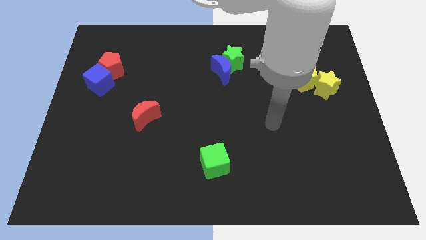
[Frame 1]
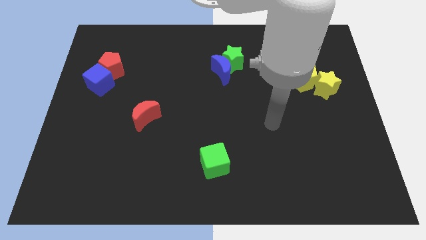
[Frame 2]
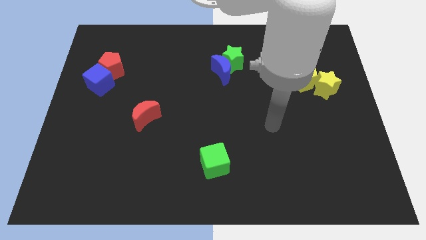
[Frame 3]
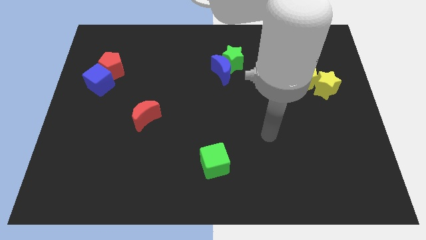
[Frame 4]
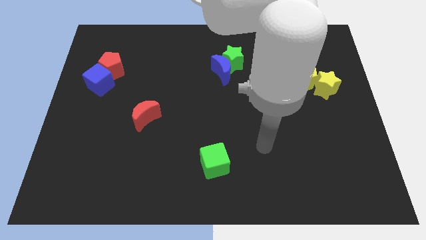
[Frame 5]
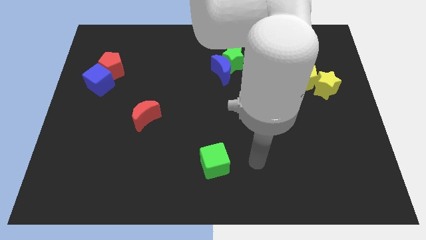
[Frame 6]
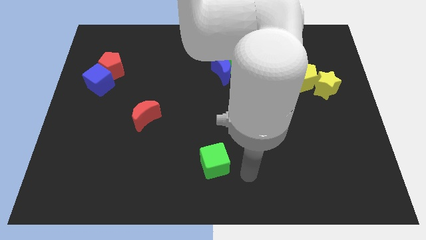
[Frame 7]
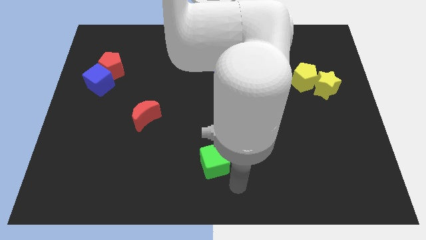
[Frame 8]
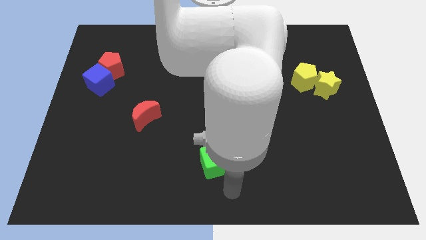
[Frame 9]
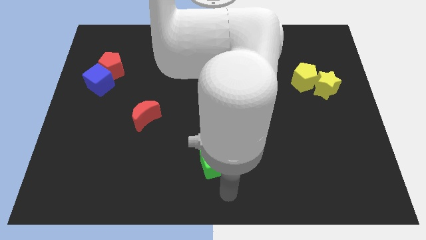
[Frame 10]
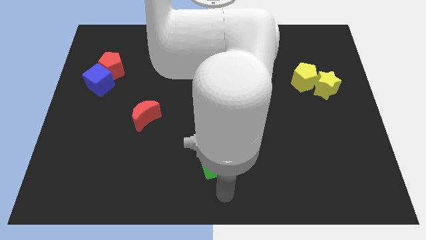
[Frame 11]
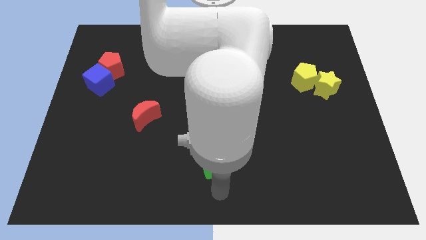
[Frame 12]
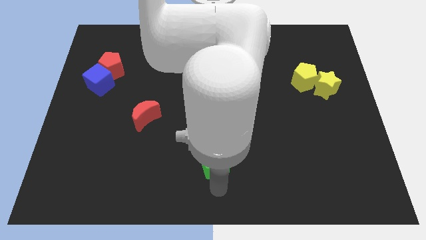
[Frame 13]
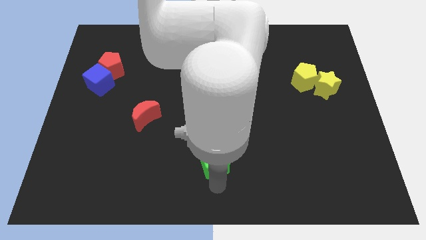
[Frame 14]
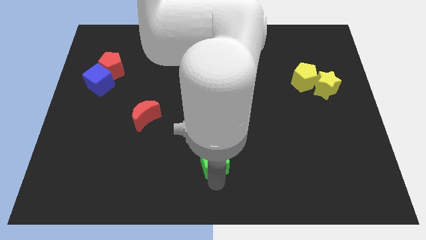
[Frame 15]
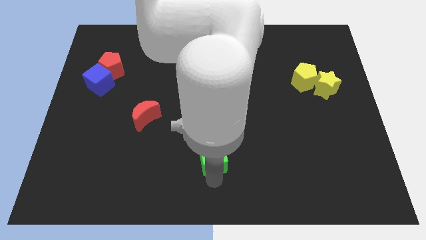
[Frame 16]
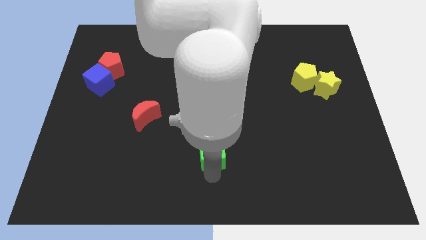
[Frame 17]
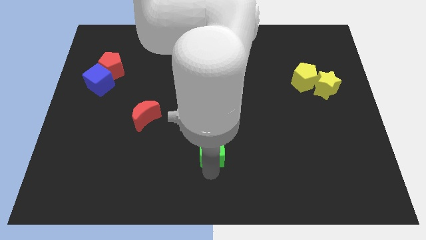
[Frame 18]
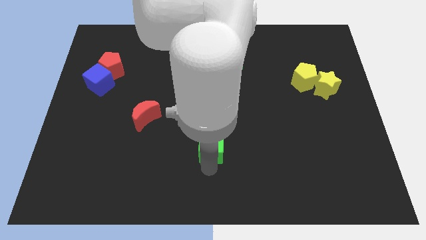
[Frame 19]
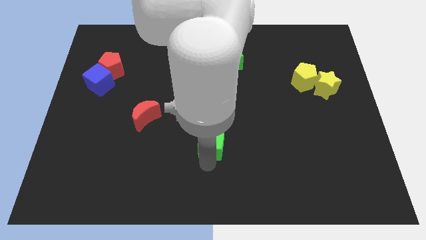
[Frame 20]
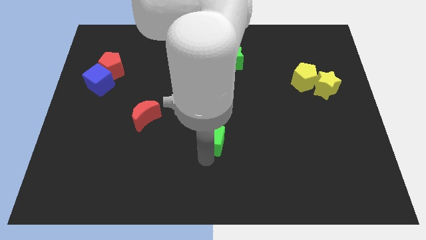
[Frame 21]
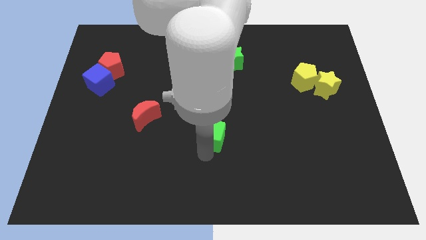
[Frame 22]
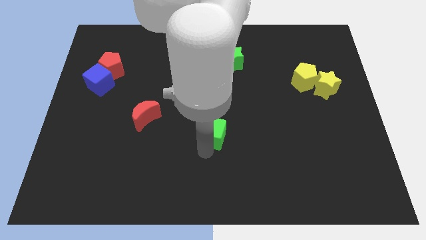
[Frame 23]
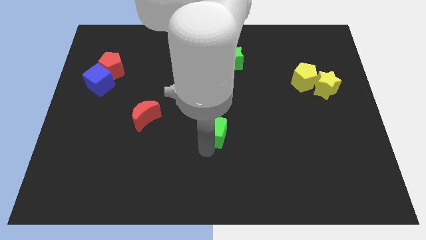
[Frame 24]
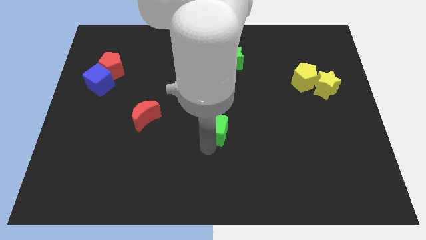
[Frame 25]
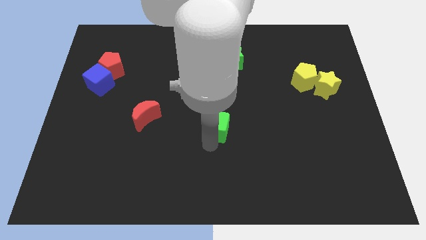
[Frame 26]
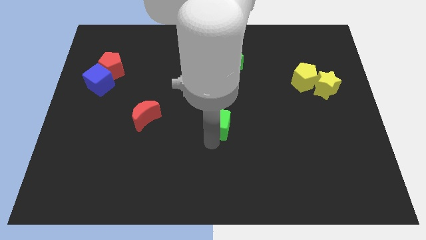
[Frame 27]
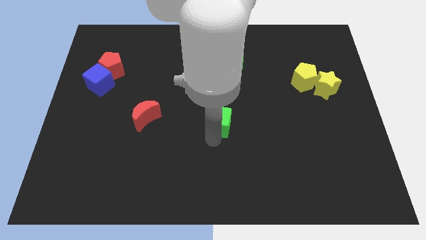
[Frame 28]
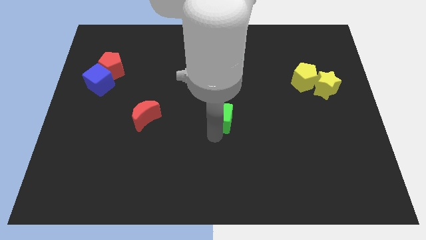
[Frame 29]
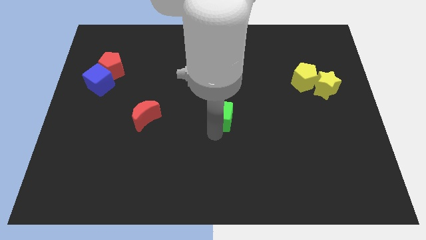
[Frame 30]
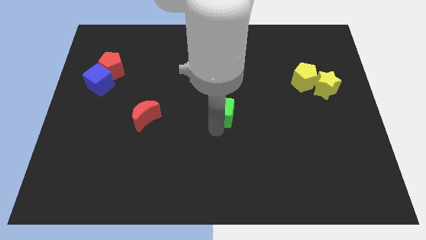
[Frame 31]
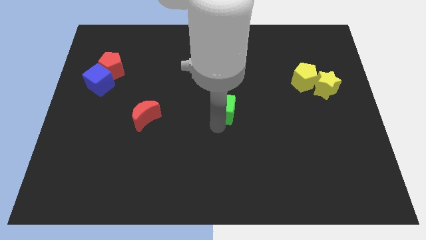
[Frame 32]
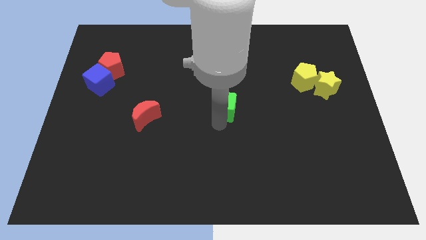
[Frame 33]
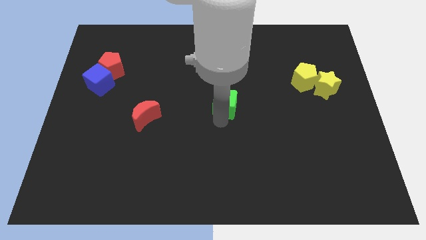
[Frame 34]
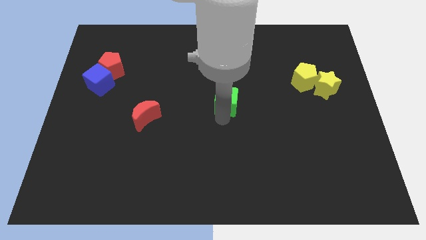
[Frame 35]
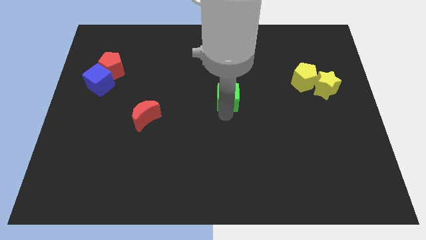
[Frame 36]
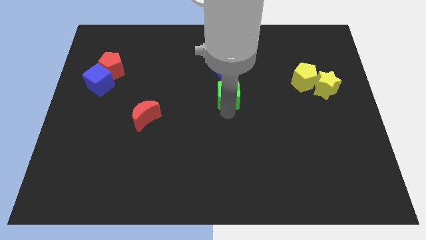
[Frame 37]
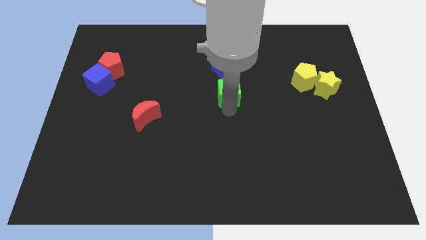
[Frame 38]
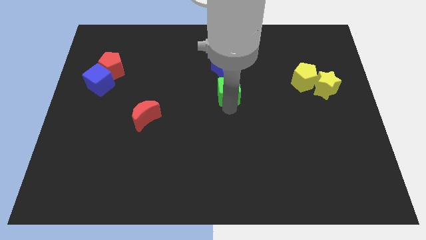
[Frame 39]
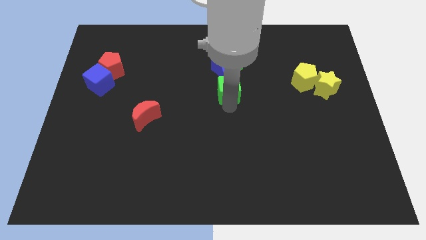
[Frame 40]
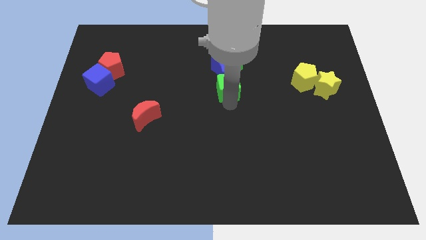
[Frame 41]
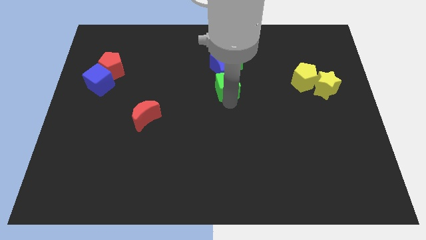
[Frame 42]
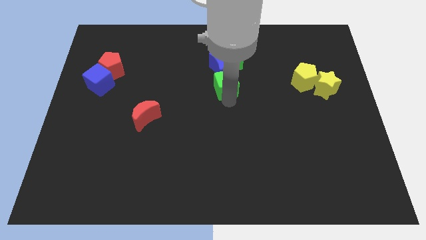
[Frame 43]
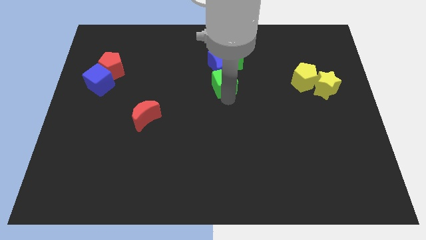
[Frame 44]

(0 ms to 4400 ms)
put the green cube towards the blue moon

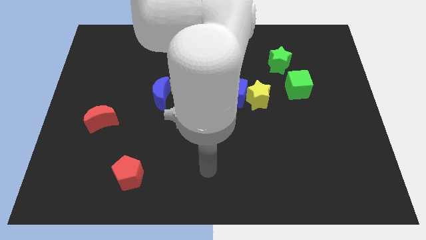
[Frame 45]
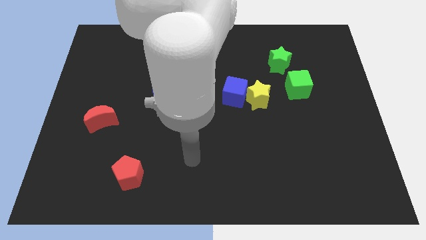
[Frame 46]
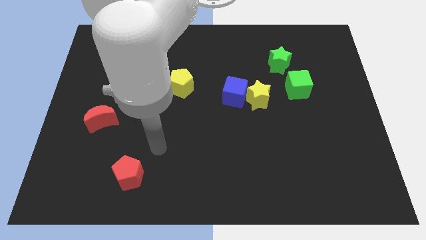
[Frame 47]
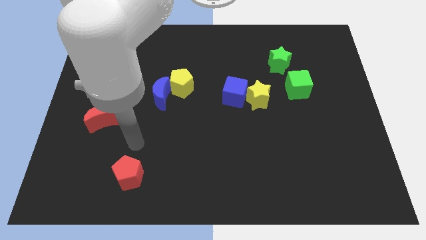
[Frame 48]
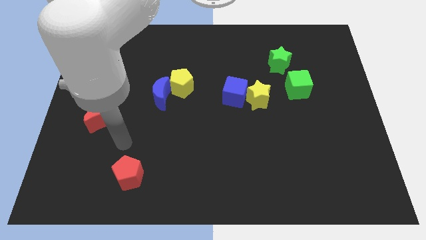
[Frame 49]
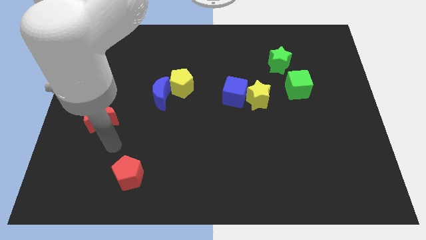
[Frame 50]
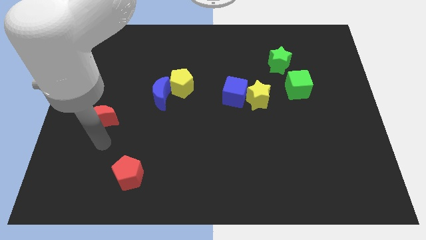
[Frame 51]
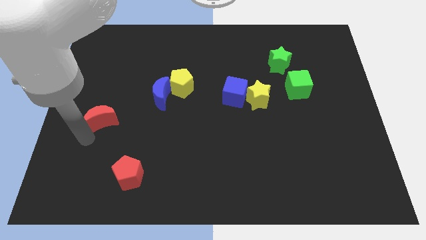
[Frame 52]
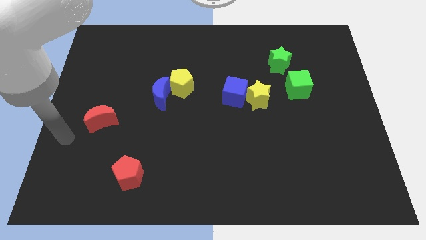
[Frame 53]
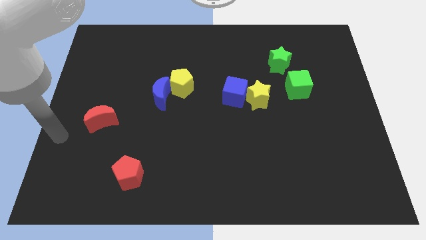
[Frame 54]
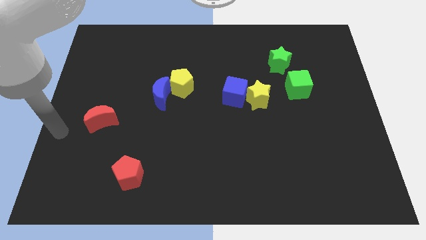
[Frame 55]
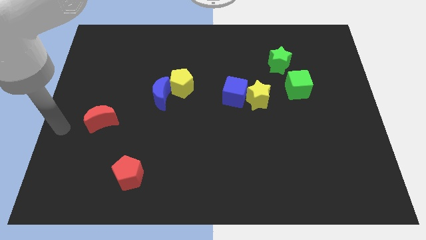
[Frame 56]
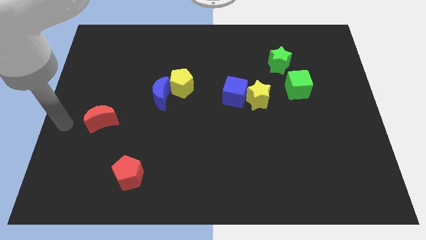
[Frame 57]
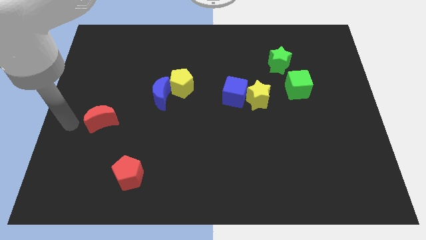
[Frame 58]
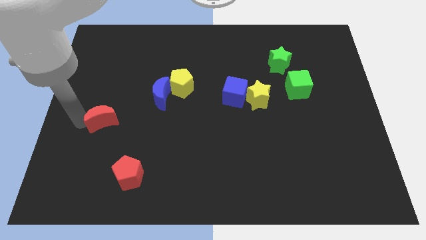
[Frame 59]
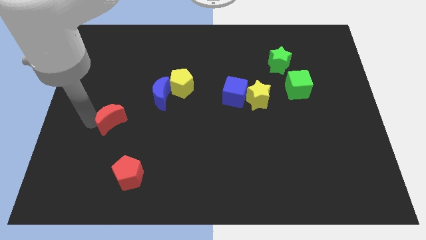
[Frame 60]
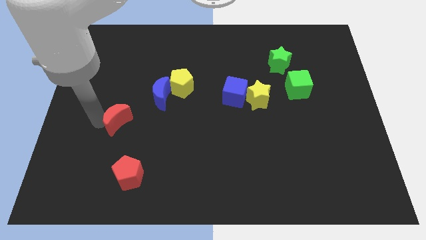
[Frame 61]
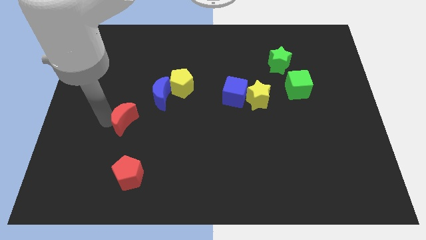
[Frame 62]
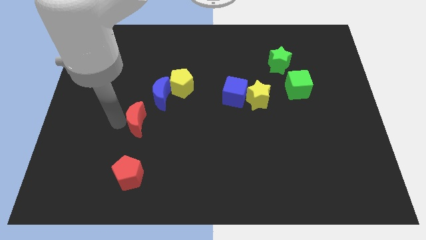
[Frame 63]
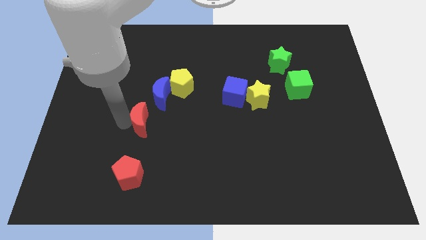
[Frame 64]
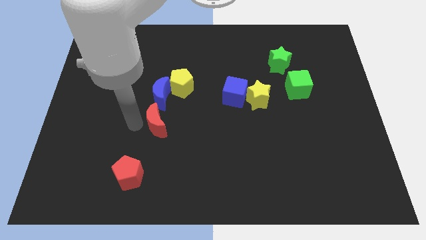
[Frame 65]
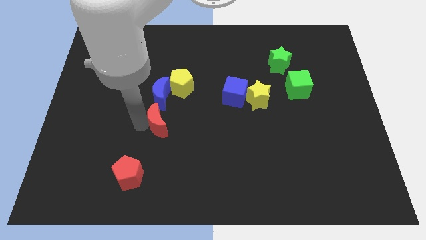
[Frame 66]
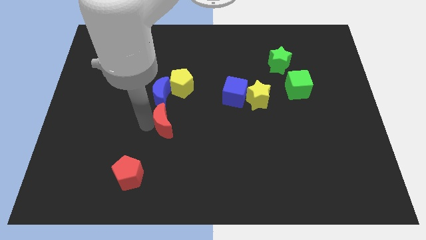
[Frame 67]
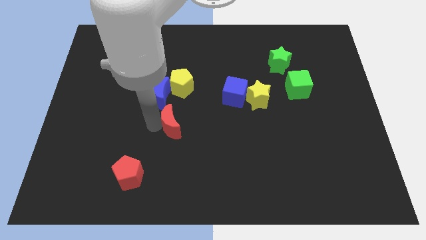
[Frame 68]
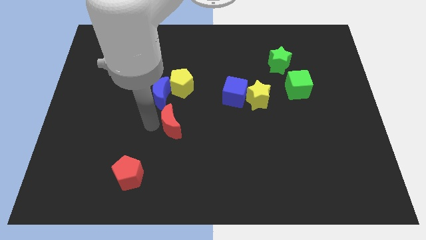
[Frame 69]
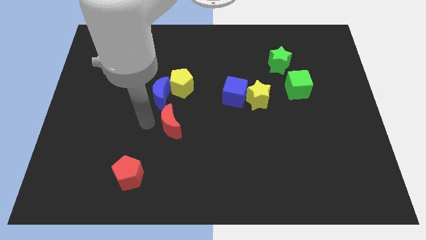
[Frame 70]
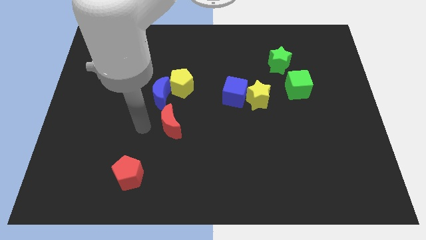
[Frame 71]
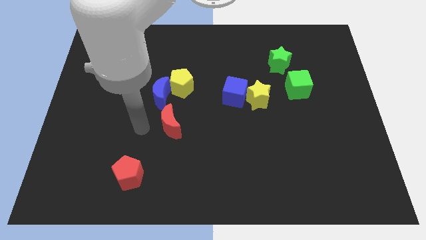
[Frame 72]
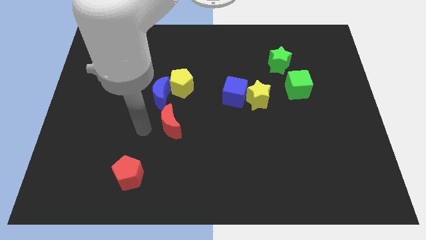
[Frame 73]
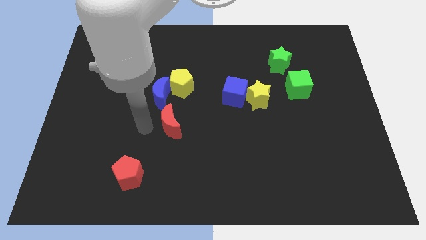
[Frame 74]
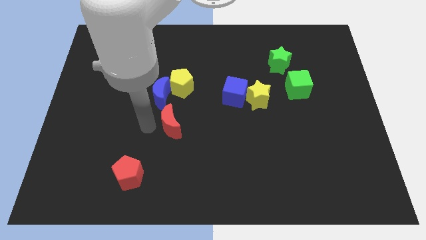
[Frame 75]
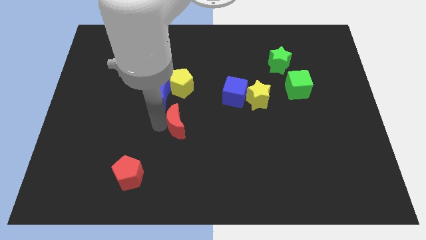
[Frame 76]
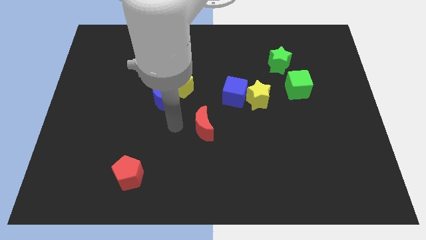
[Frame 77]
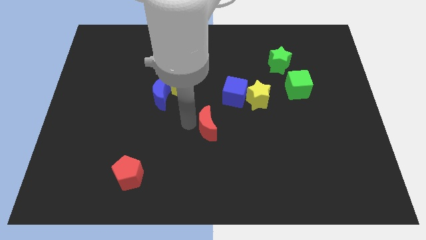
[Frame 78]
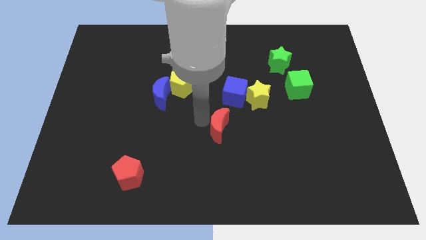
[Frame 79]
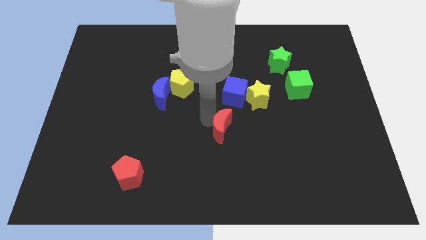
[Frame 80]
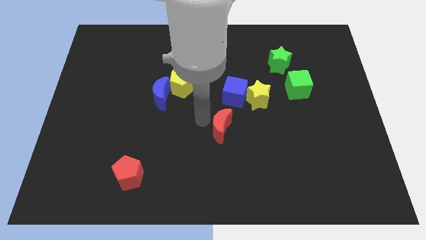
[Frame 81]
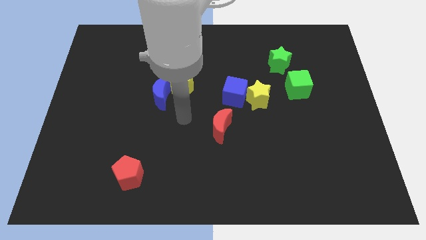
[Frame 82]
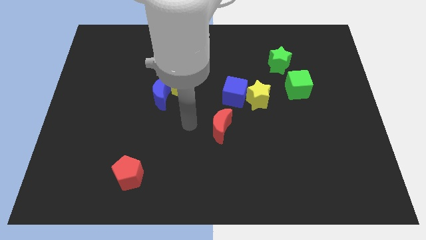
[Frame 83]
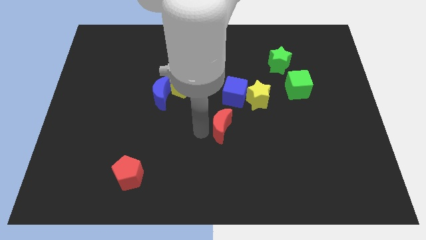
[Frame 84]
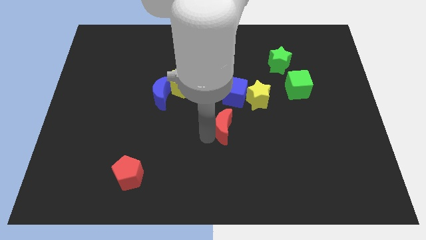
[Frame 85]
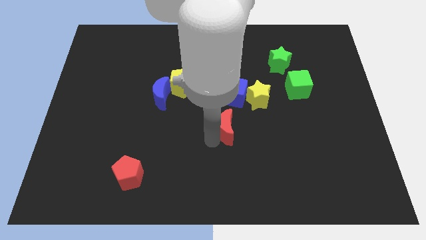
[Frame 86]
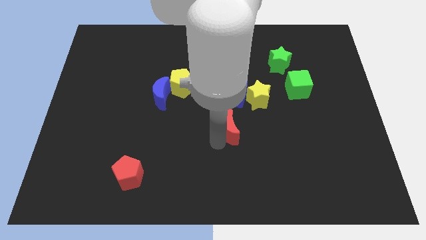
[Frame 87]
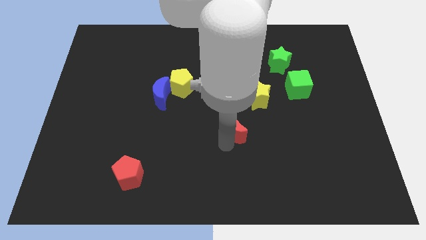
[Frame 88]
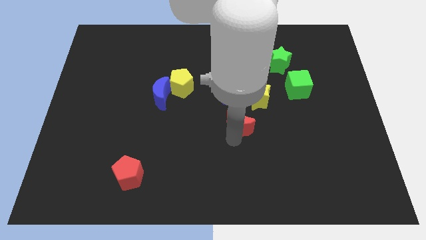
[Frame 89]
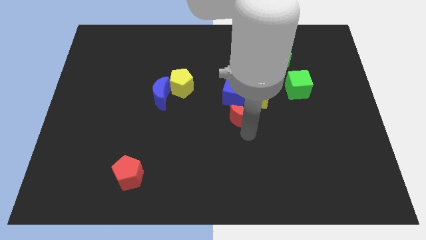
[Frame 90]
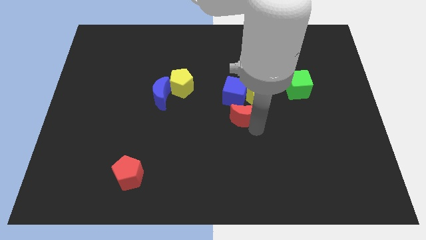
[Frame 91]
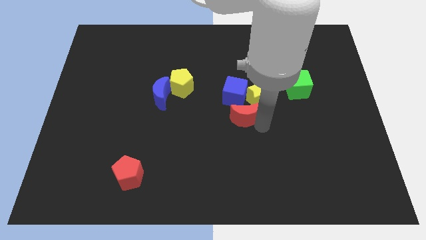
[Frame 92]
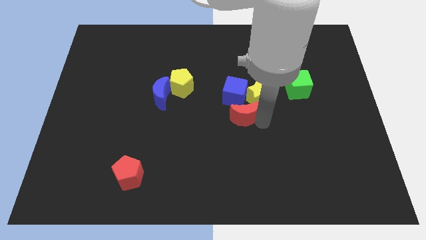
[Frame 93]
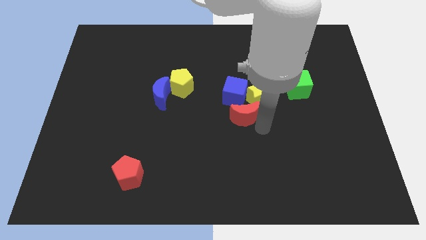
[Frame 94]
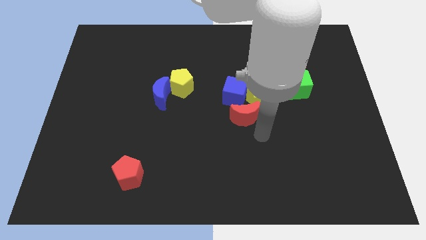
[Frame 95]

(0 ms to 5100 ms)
move the red moon to the yellow star
